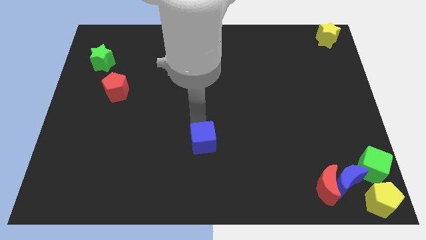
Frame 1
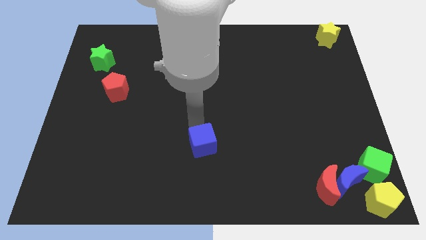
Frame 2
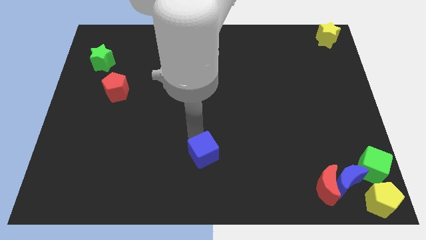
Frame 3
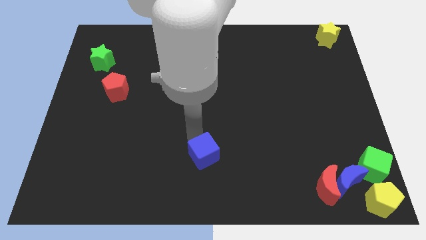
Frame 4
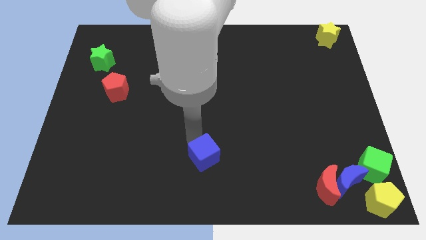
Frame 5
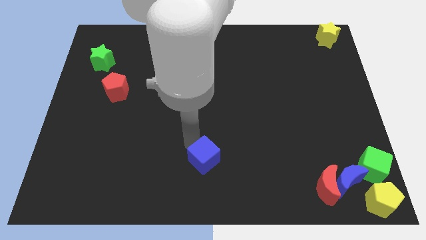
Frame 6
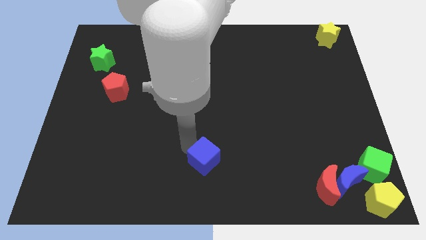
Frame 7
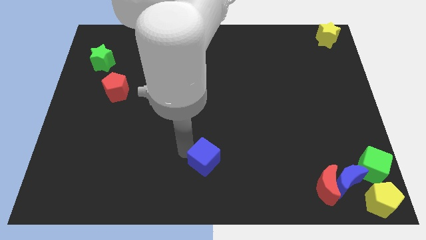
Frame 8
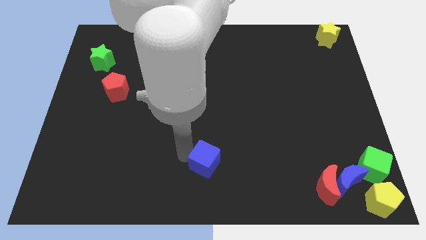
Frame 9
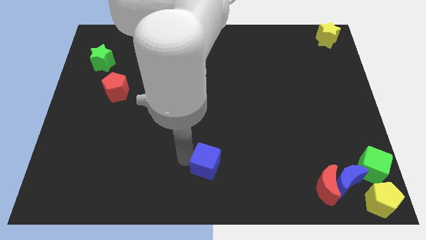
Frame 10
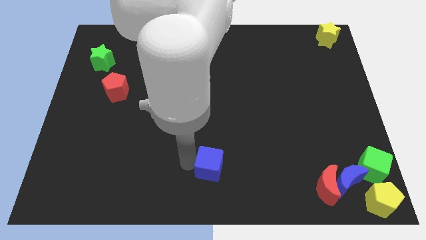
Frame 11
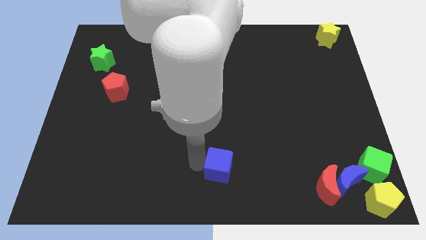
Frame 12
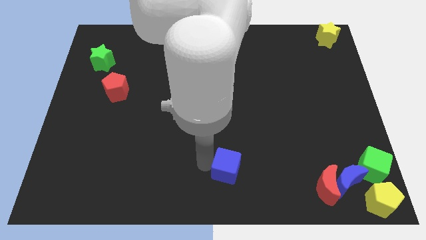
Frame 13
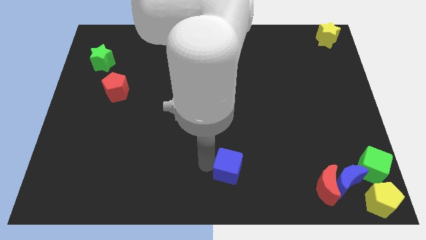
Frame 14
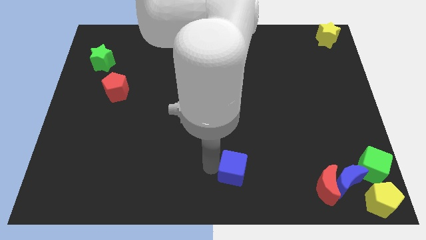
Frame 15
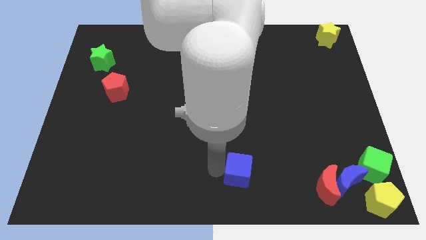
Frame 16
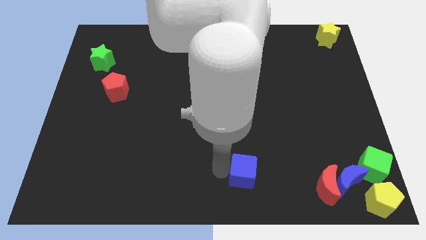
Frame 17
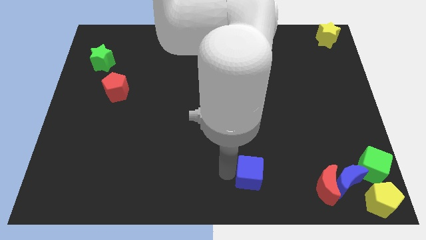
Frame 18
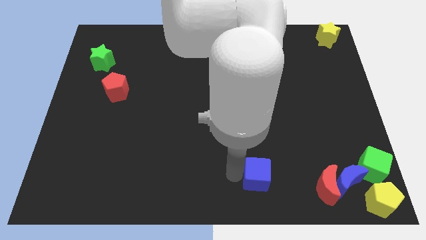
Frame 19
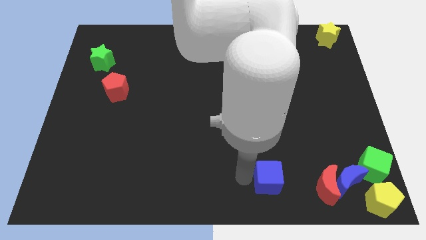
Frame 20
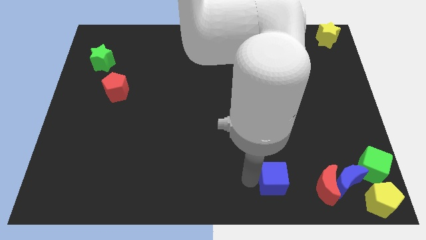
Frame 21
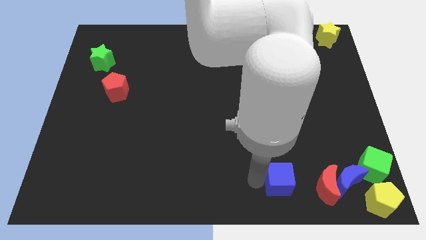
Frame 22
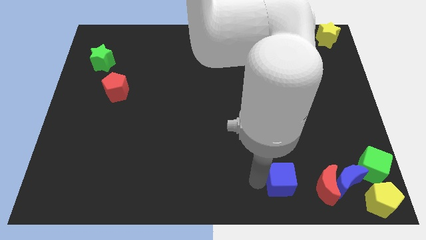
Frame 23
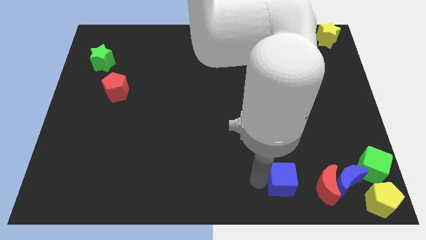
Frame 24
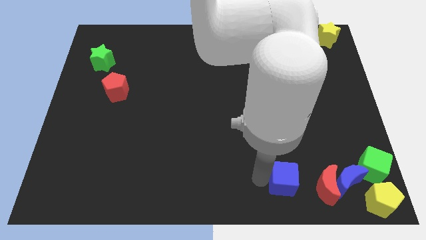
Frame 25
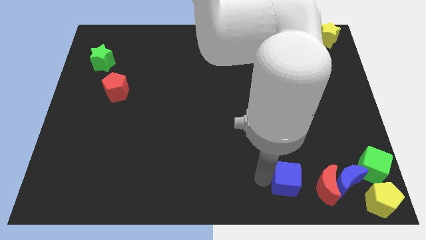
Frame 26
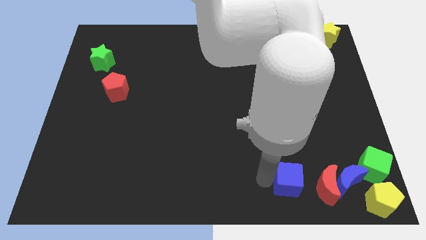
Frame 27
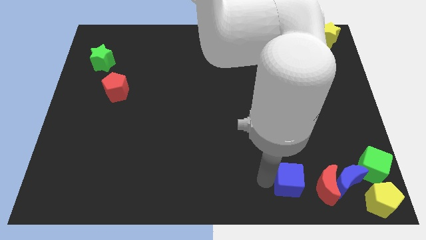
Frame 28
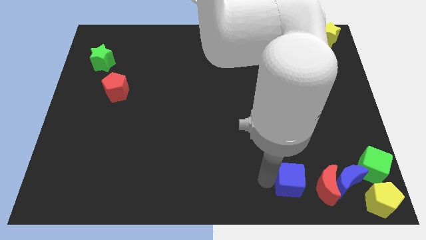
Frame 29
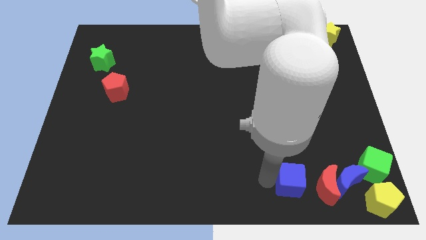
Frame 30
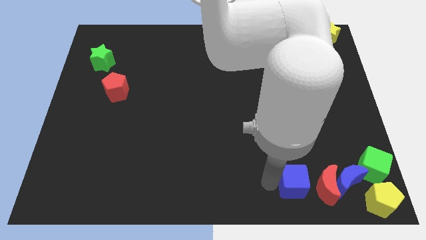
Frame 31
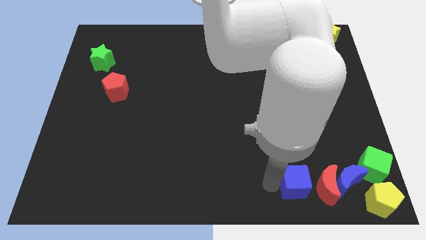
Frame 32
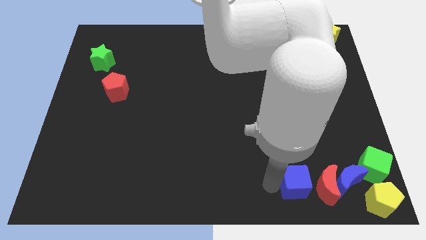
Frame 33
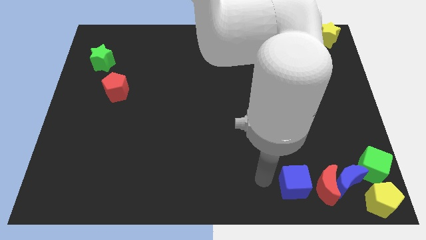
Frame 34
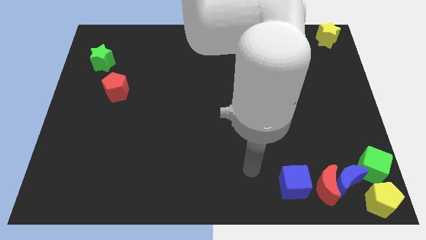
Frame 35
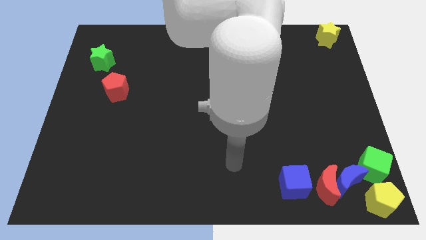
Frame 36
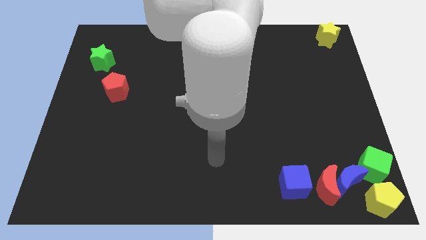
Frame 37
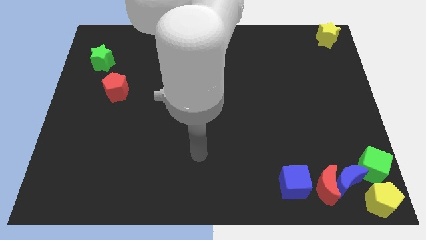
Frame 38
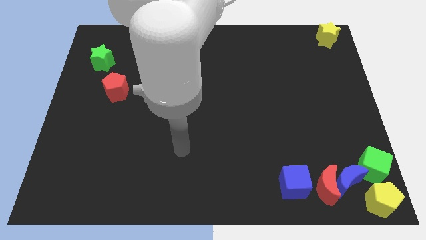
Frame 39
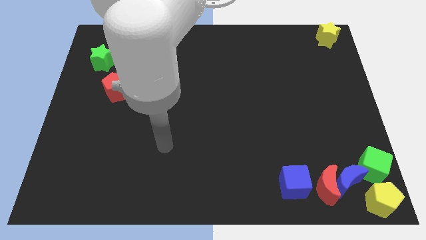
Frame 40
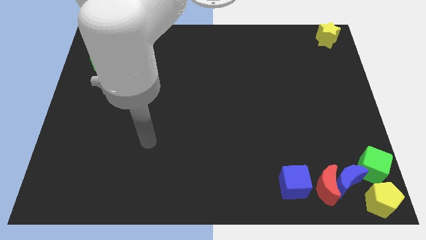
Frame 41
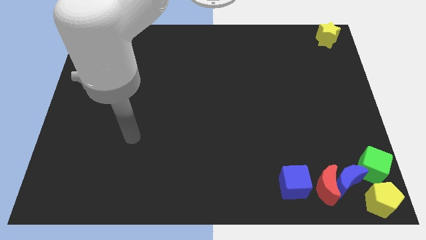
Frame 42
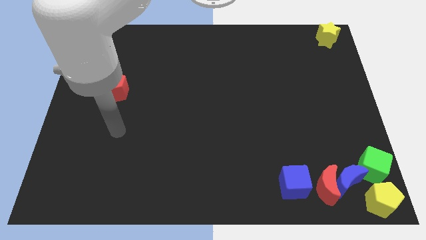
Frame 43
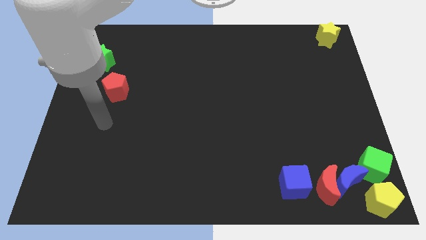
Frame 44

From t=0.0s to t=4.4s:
move the blue cube left beside the red moon

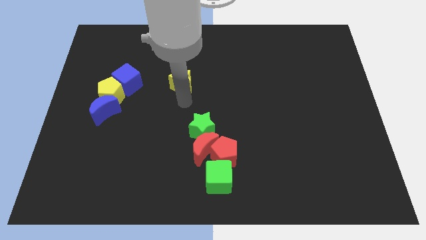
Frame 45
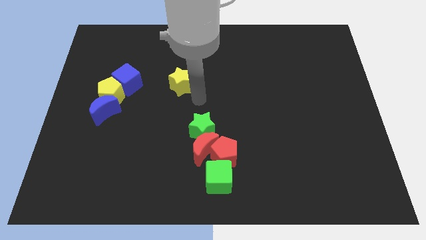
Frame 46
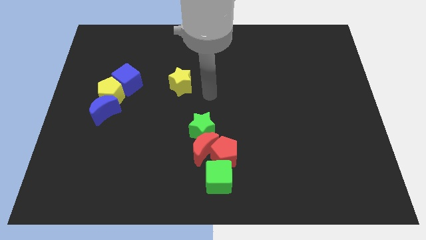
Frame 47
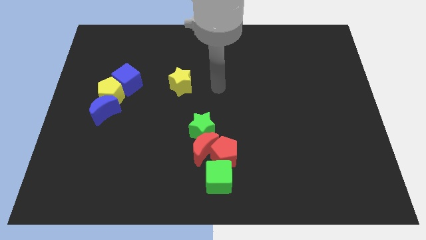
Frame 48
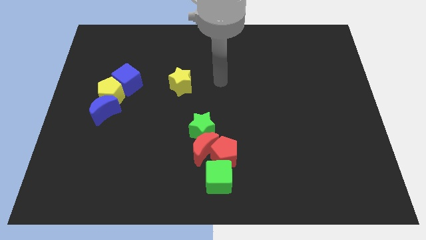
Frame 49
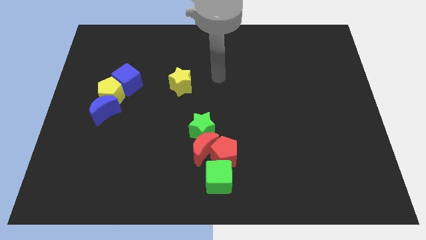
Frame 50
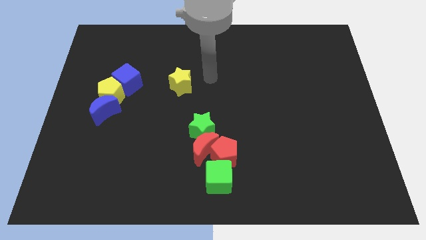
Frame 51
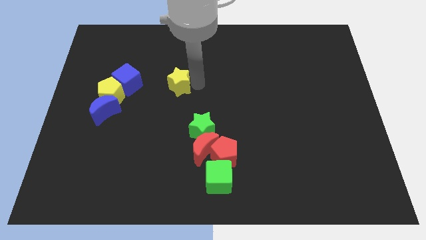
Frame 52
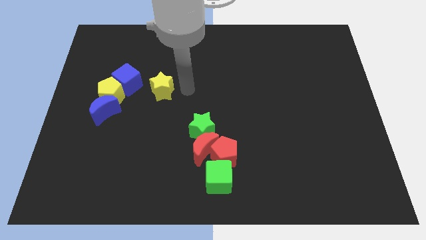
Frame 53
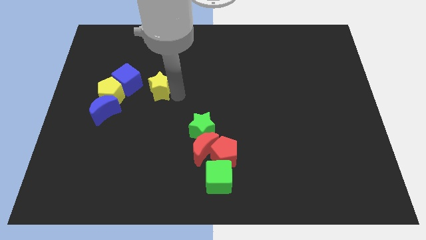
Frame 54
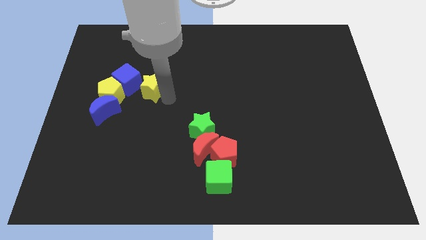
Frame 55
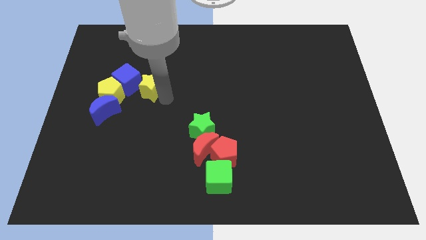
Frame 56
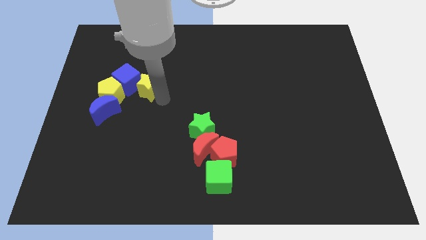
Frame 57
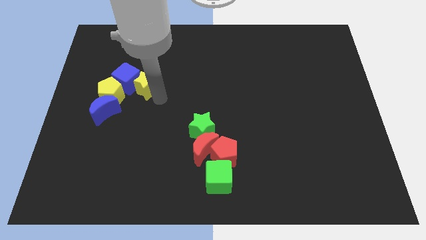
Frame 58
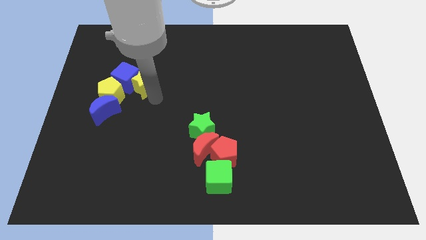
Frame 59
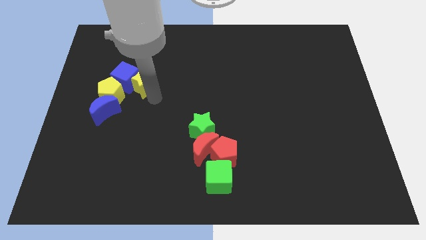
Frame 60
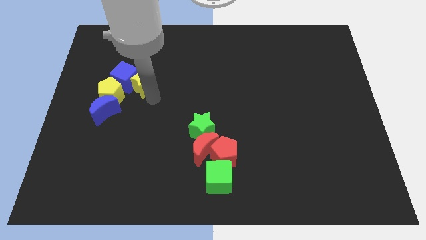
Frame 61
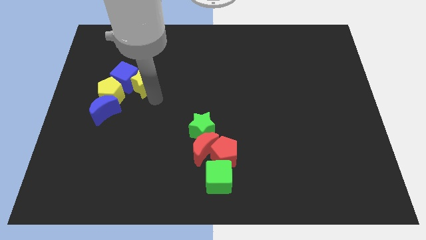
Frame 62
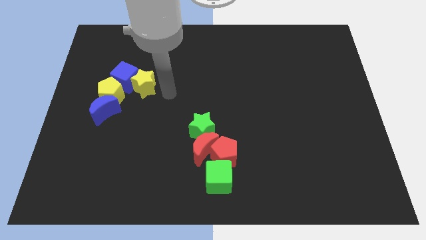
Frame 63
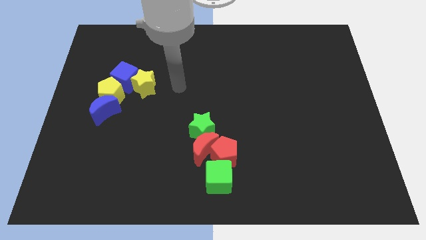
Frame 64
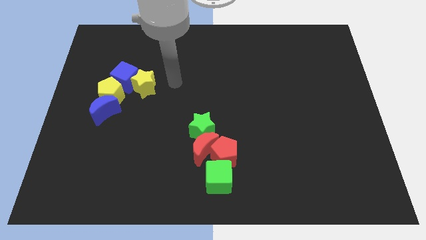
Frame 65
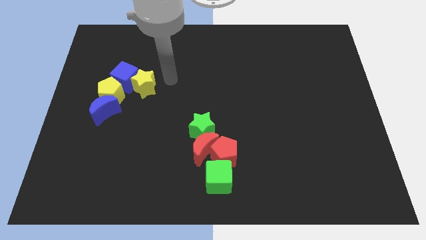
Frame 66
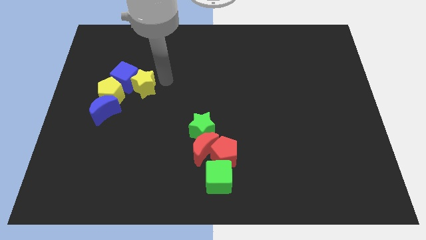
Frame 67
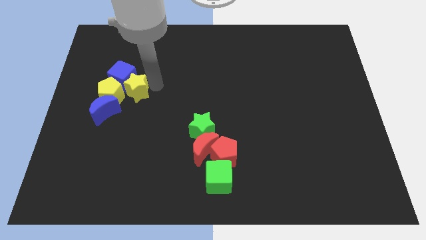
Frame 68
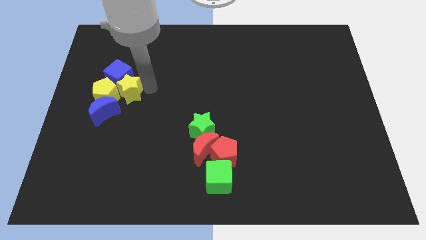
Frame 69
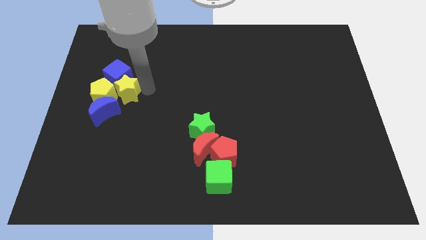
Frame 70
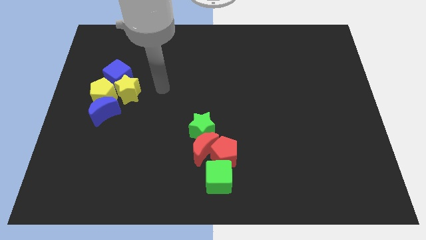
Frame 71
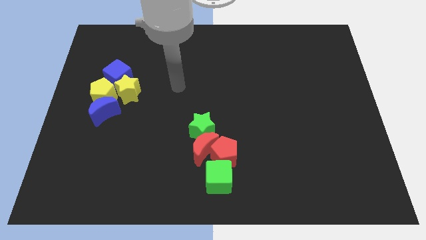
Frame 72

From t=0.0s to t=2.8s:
push the yellow star into the group of blocks

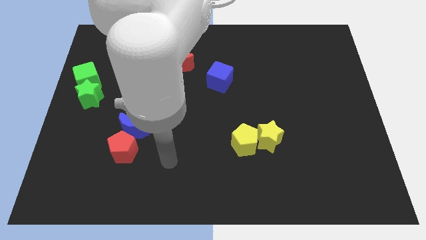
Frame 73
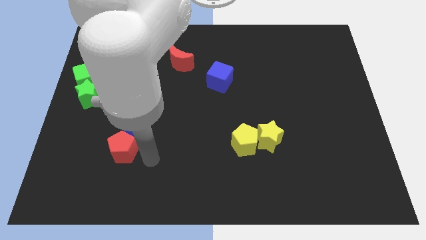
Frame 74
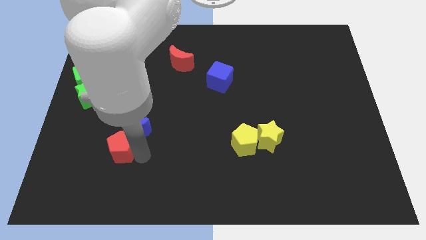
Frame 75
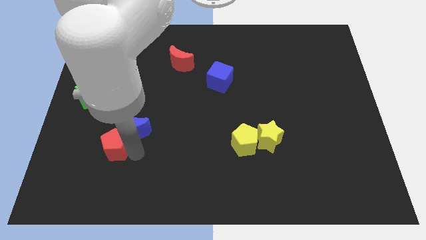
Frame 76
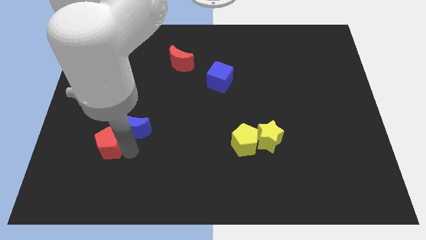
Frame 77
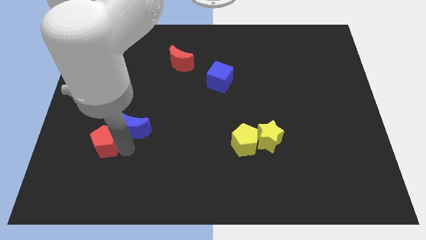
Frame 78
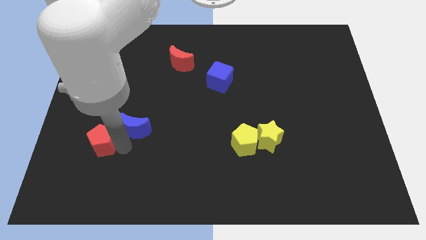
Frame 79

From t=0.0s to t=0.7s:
slightly move the red pentagon to the left side of the board

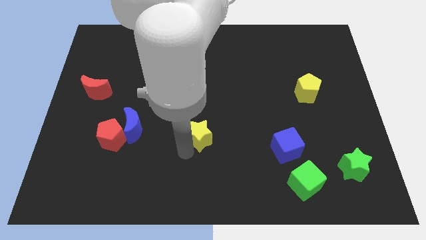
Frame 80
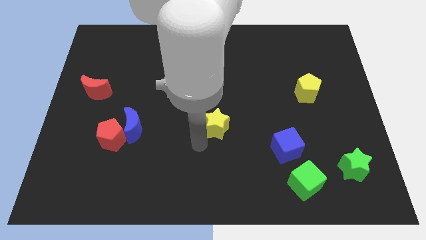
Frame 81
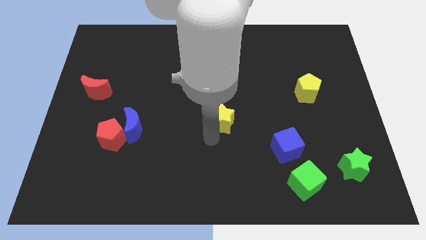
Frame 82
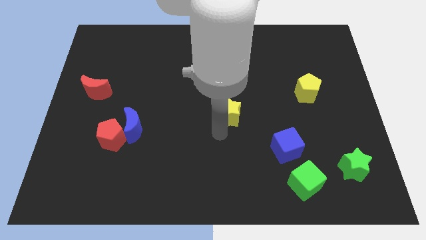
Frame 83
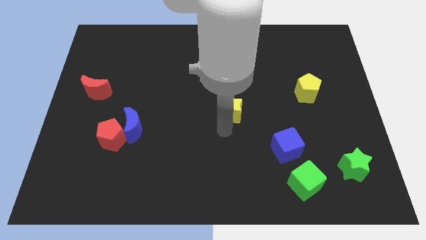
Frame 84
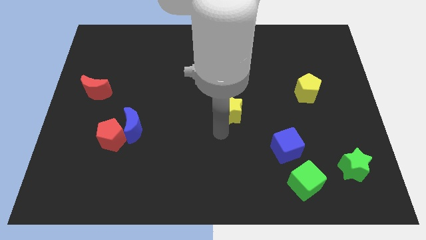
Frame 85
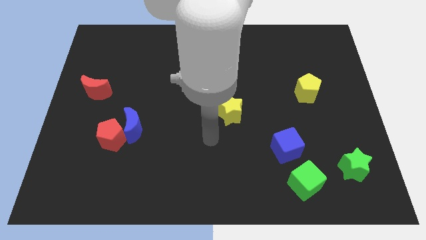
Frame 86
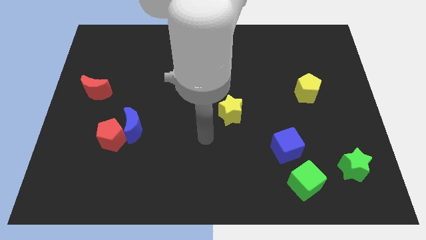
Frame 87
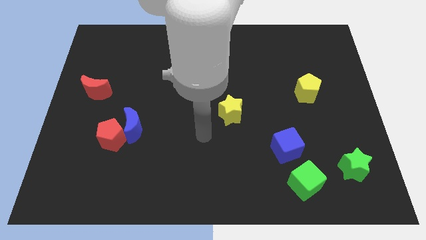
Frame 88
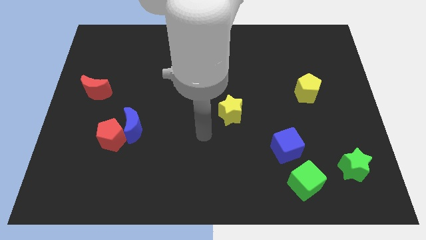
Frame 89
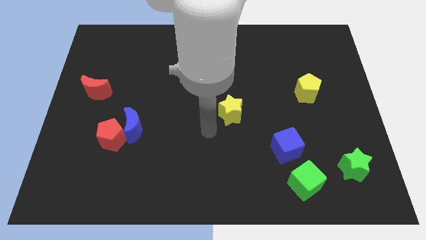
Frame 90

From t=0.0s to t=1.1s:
place yellow star to the center of the board
